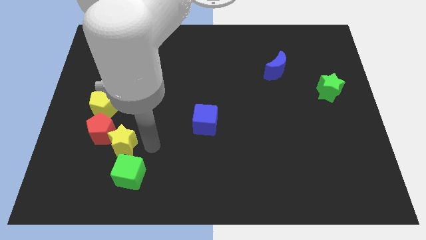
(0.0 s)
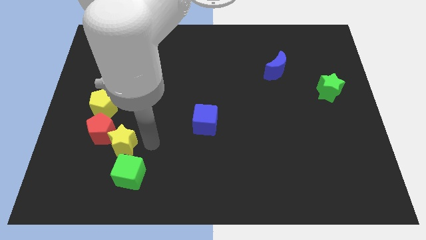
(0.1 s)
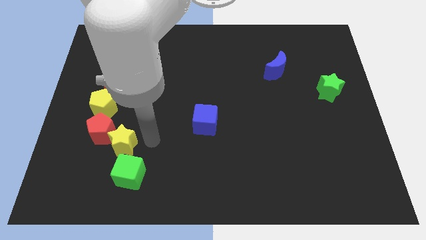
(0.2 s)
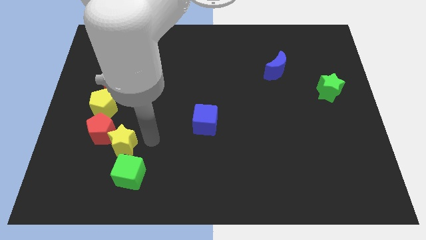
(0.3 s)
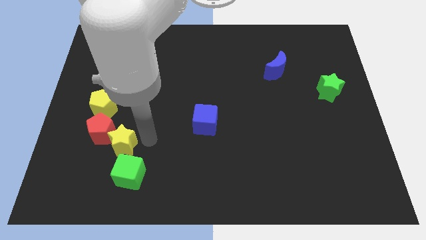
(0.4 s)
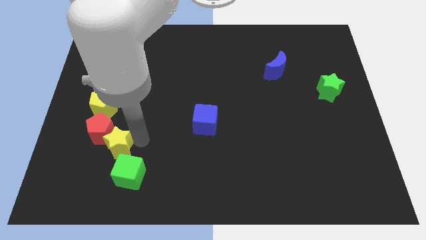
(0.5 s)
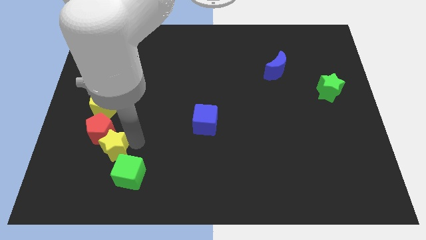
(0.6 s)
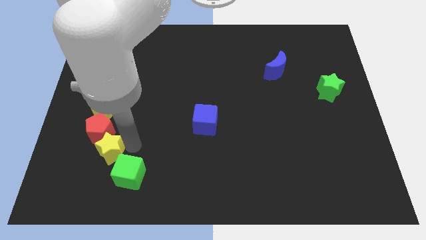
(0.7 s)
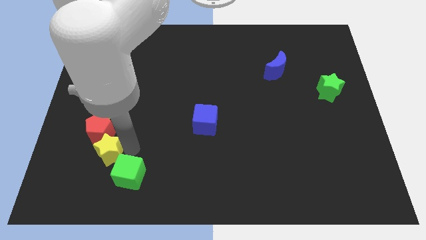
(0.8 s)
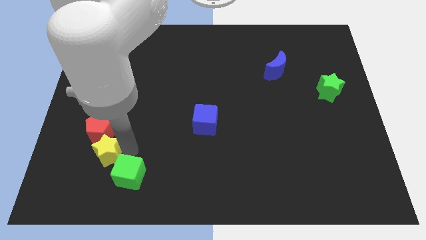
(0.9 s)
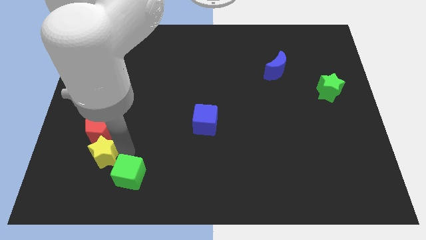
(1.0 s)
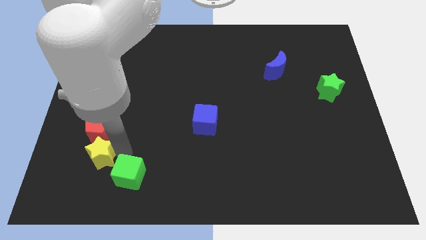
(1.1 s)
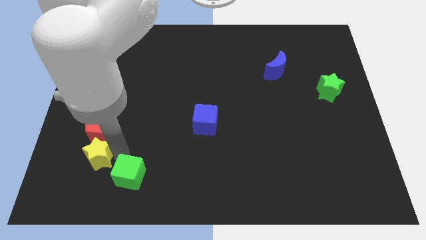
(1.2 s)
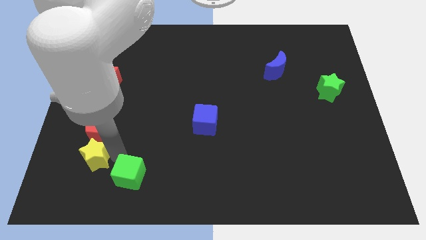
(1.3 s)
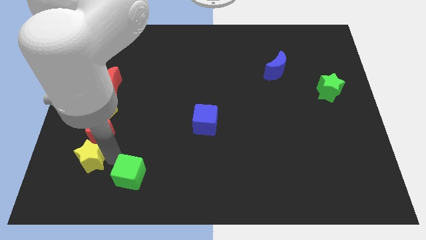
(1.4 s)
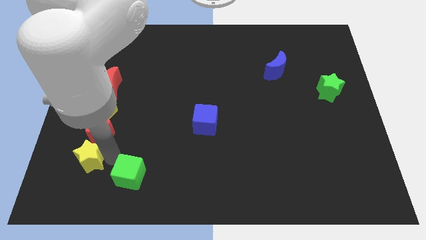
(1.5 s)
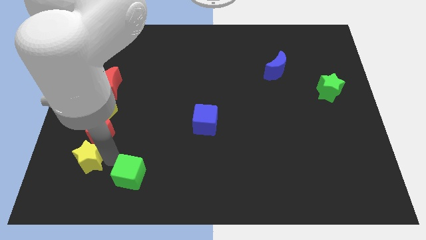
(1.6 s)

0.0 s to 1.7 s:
place the yellow star below the red pentagon

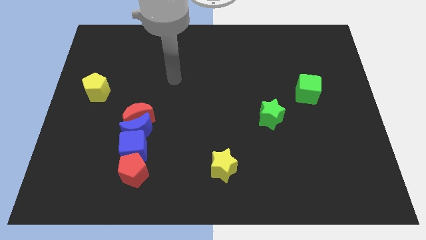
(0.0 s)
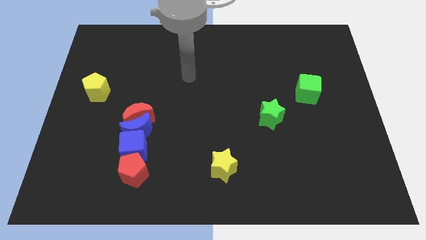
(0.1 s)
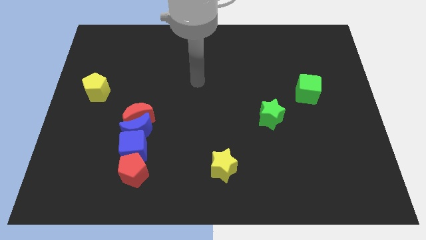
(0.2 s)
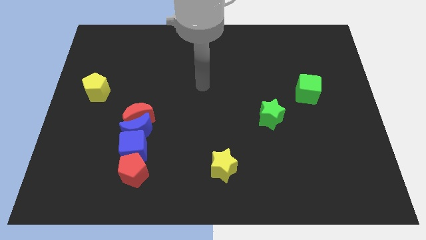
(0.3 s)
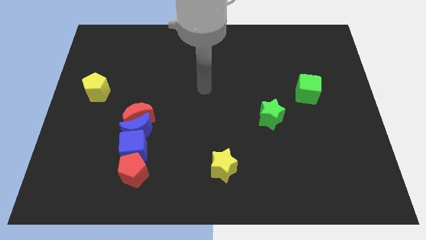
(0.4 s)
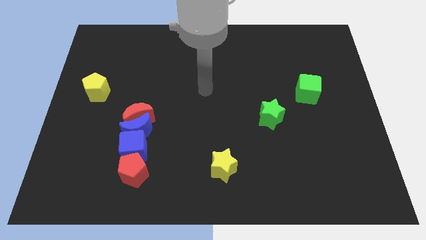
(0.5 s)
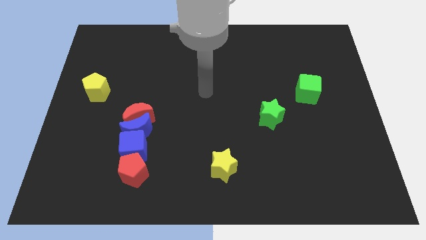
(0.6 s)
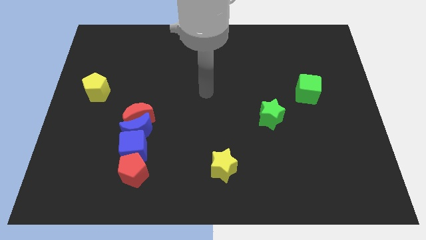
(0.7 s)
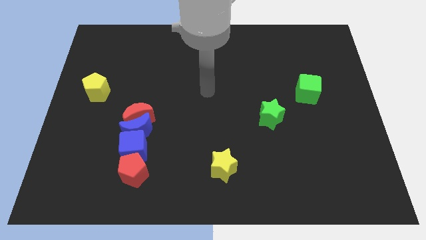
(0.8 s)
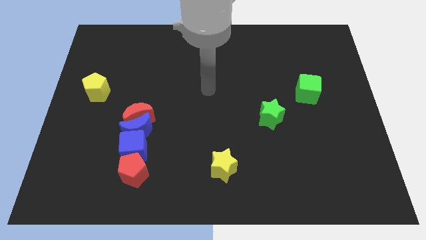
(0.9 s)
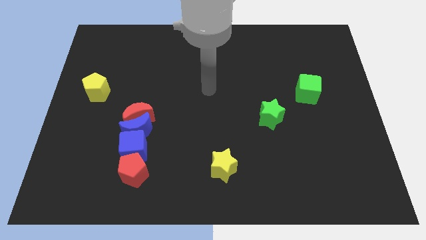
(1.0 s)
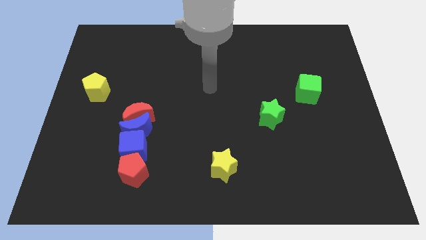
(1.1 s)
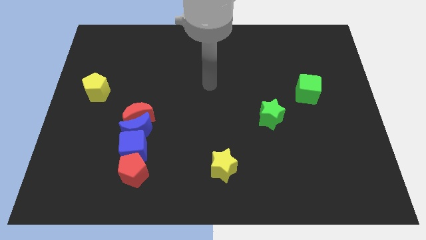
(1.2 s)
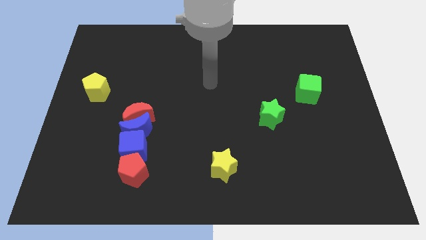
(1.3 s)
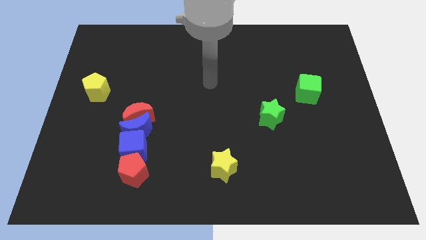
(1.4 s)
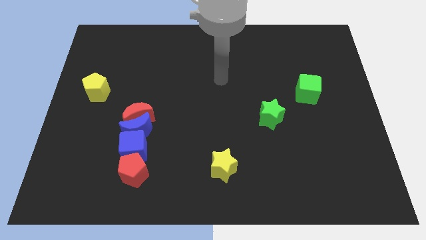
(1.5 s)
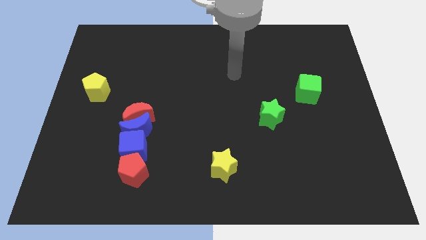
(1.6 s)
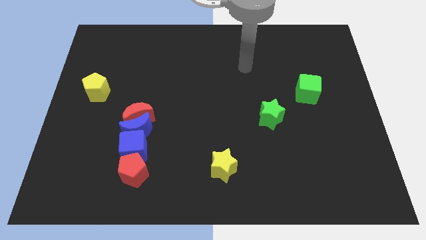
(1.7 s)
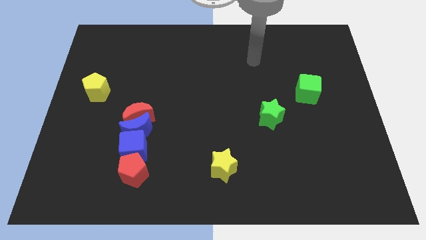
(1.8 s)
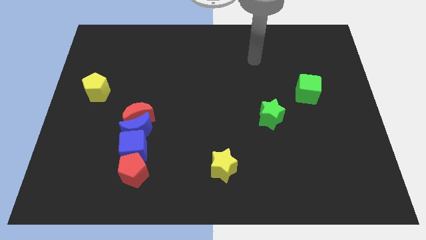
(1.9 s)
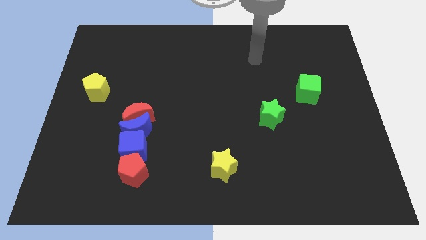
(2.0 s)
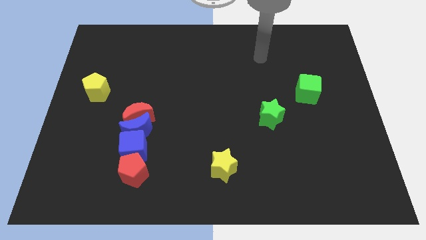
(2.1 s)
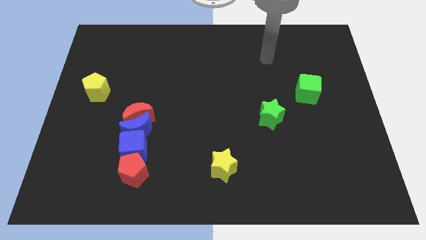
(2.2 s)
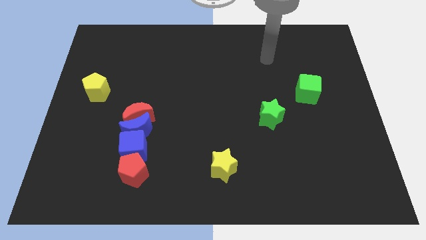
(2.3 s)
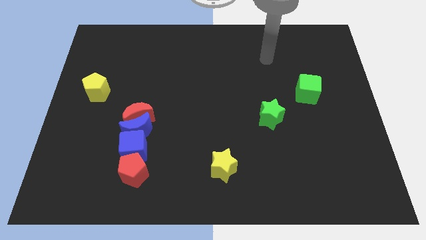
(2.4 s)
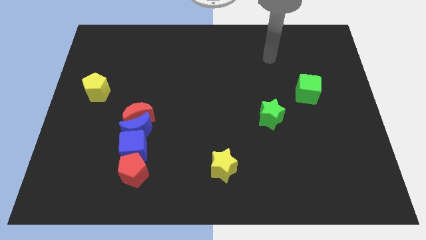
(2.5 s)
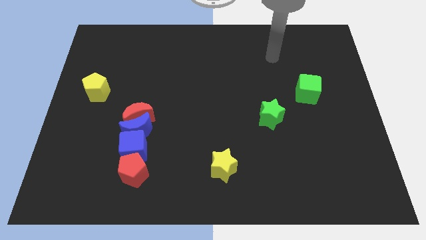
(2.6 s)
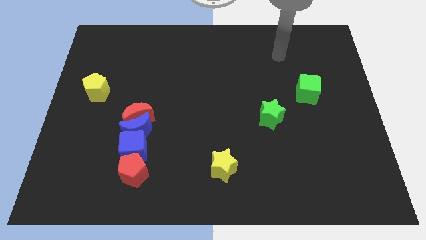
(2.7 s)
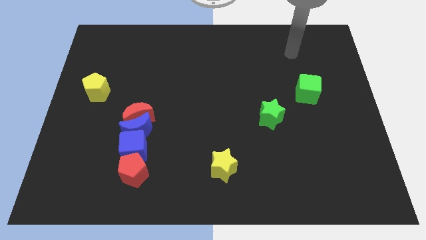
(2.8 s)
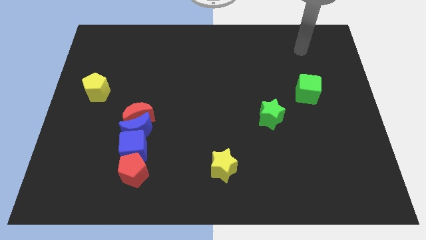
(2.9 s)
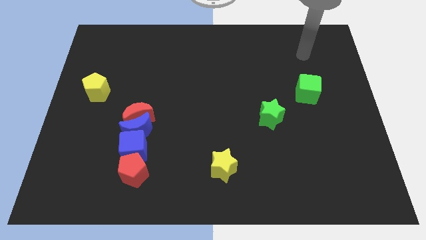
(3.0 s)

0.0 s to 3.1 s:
point your arm at the top side of the green cube

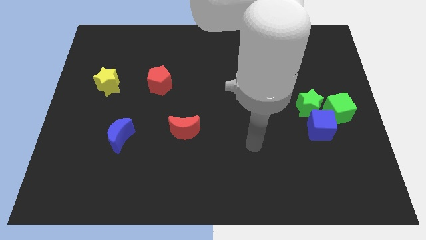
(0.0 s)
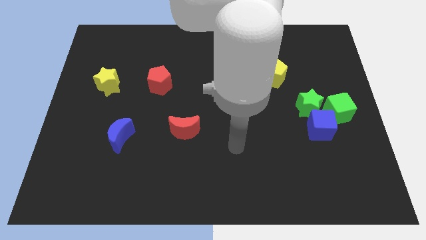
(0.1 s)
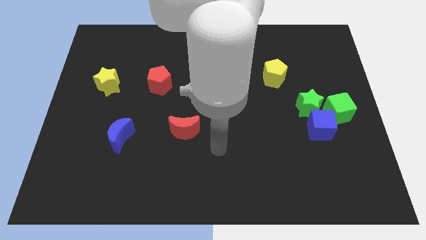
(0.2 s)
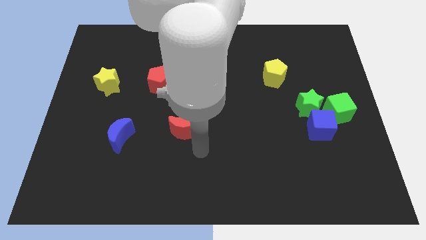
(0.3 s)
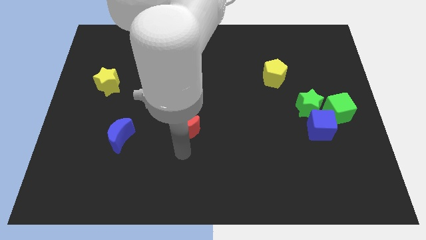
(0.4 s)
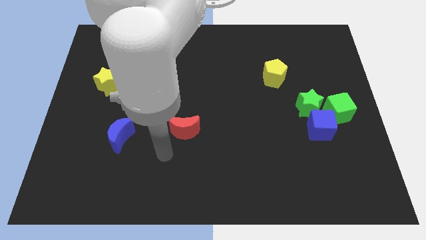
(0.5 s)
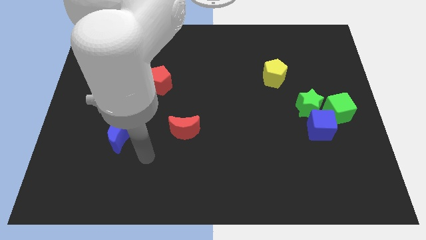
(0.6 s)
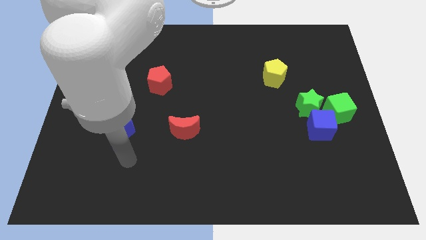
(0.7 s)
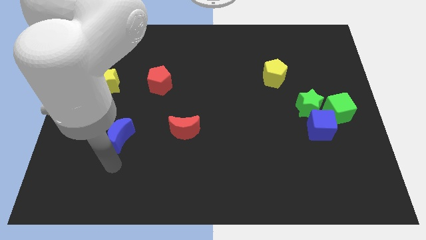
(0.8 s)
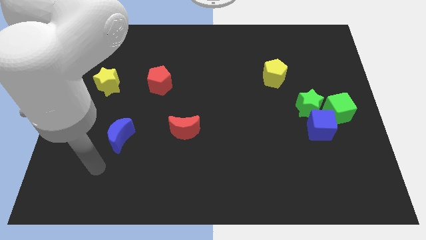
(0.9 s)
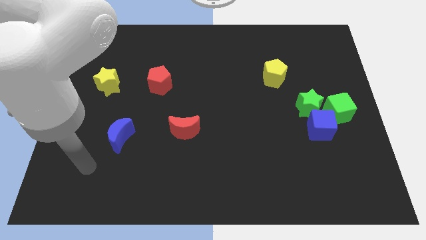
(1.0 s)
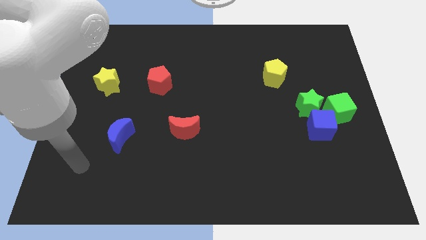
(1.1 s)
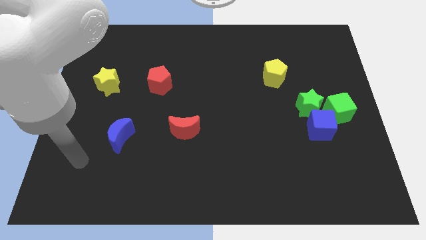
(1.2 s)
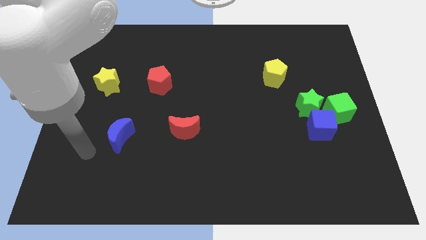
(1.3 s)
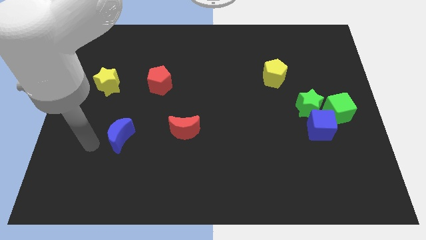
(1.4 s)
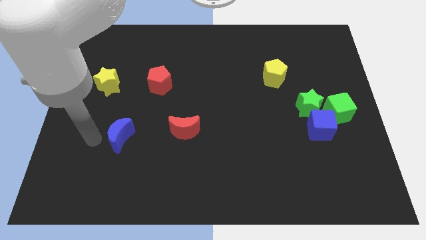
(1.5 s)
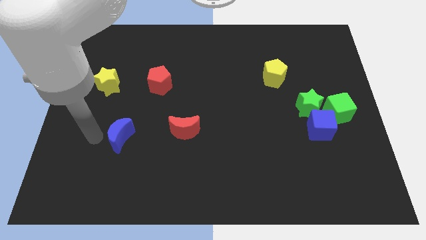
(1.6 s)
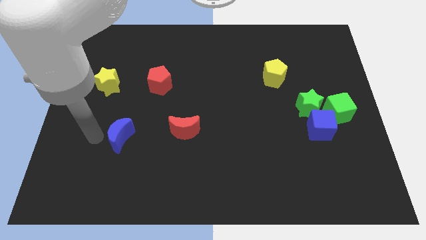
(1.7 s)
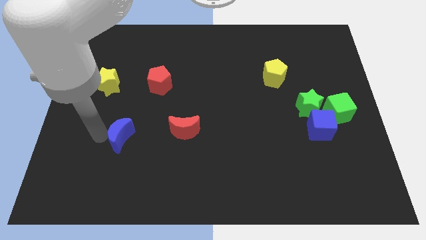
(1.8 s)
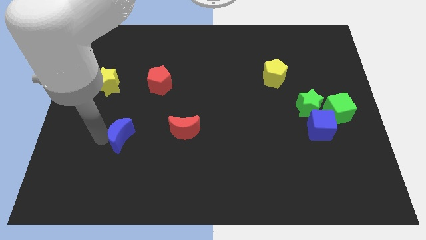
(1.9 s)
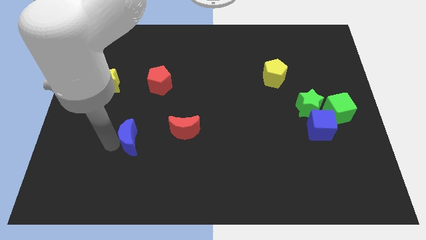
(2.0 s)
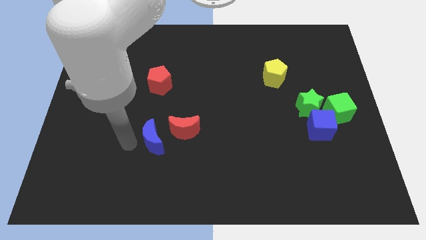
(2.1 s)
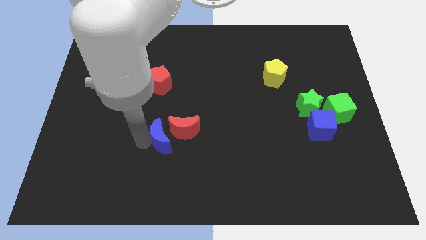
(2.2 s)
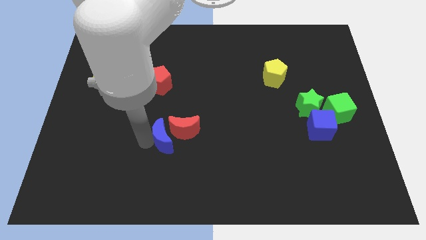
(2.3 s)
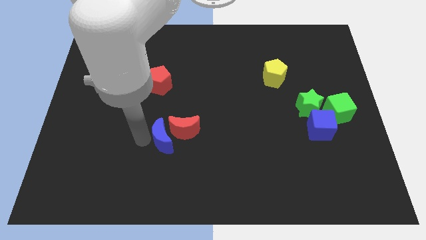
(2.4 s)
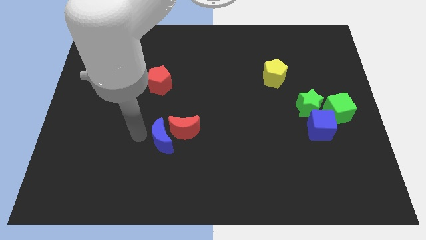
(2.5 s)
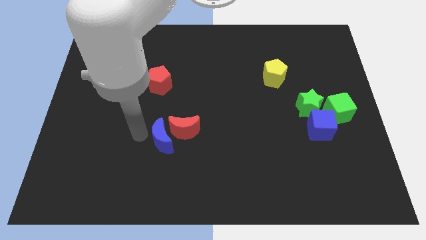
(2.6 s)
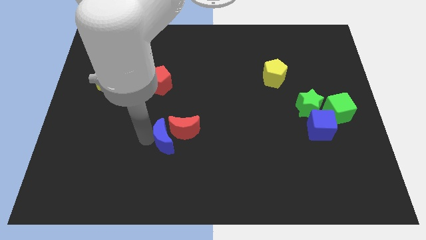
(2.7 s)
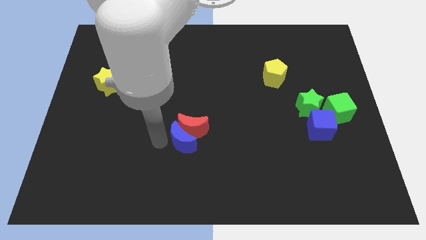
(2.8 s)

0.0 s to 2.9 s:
push the blue crescent into the red crescent

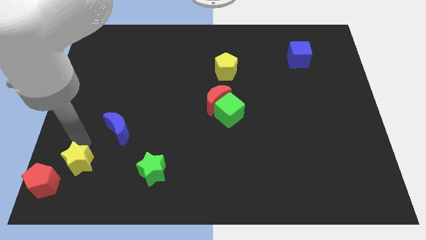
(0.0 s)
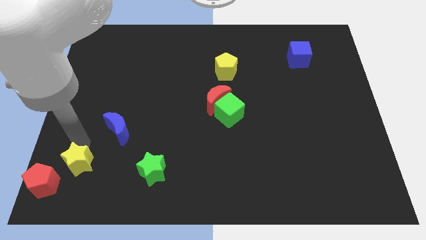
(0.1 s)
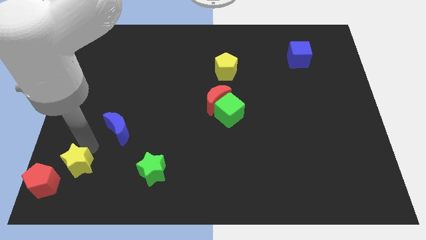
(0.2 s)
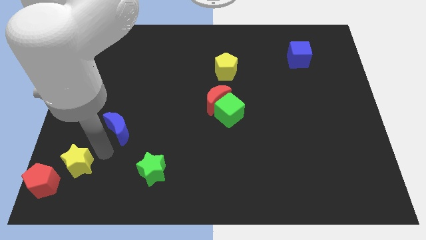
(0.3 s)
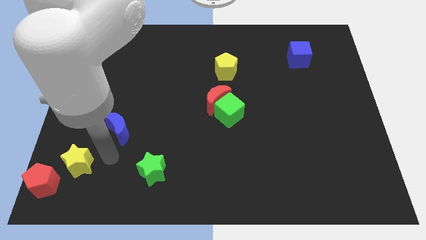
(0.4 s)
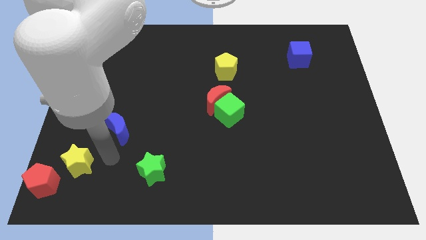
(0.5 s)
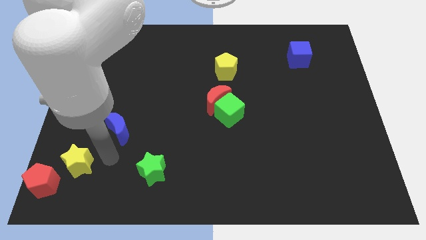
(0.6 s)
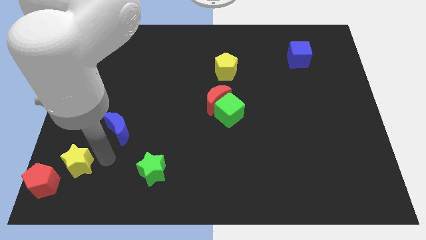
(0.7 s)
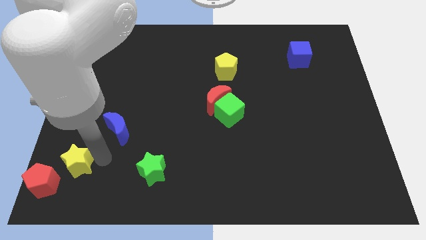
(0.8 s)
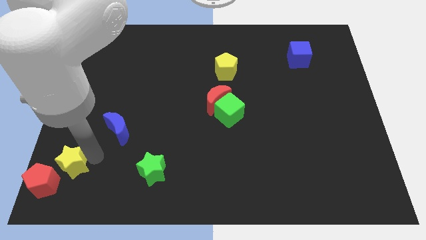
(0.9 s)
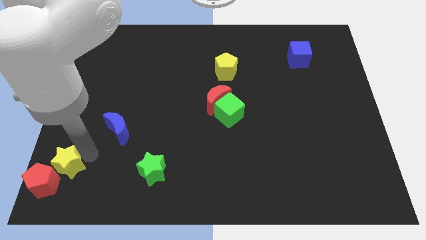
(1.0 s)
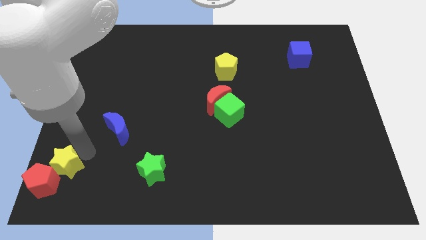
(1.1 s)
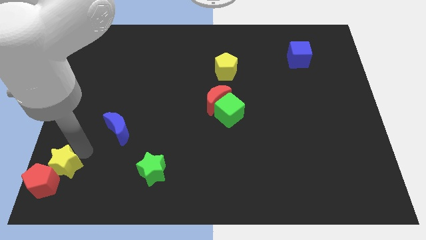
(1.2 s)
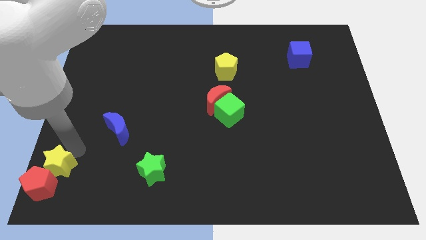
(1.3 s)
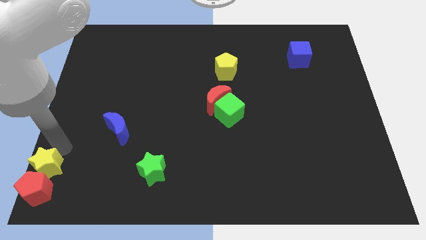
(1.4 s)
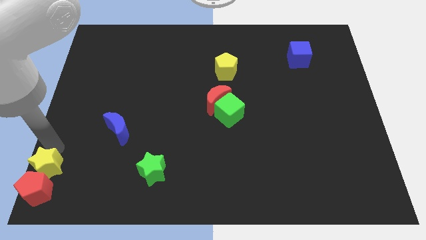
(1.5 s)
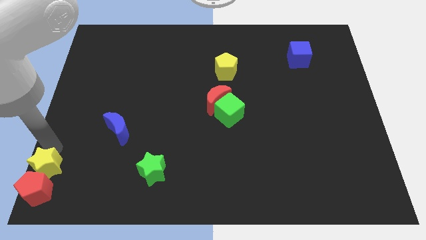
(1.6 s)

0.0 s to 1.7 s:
push yellow star into red pentagon
